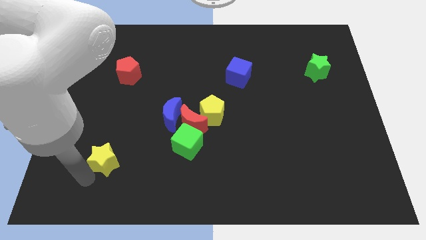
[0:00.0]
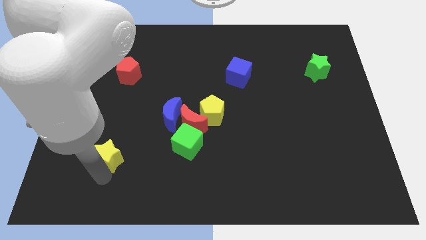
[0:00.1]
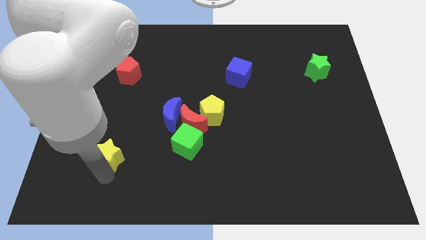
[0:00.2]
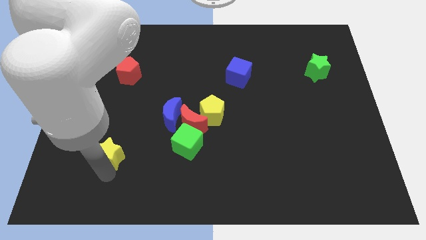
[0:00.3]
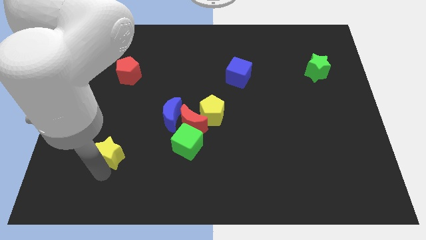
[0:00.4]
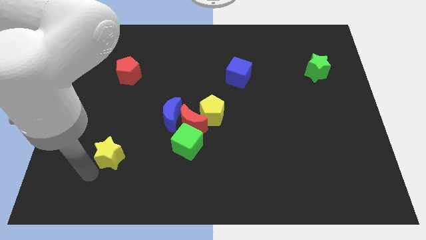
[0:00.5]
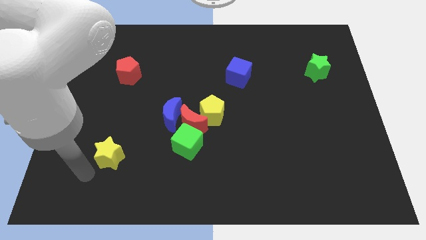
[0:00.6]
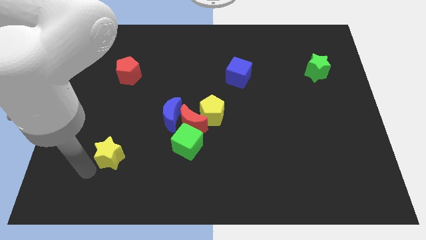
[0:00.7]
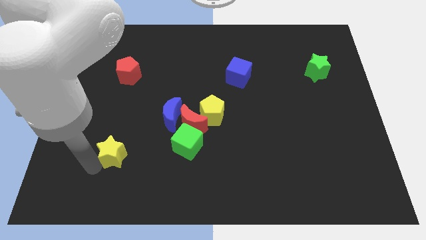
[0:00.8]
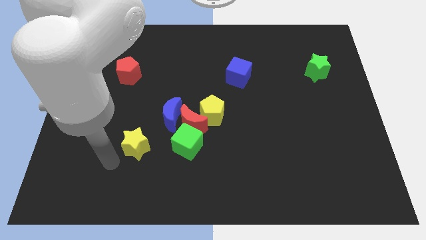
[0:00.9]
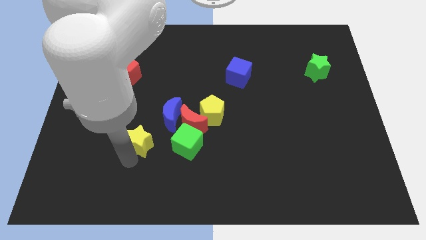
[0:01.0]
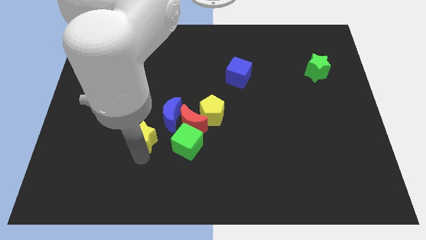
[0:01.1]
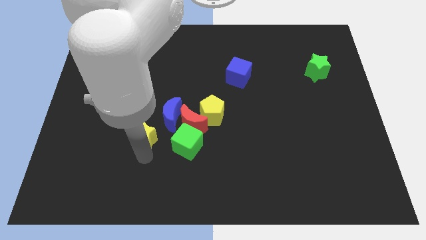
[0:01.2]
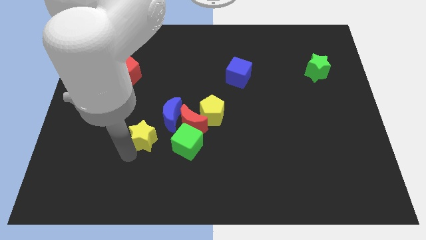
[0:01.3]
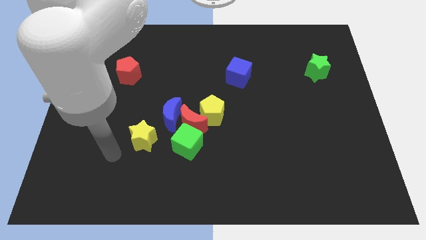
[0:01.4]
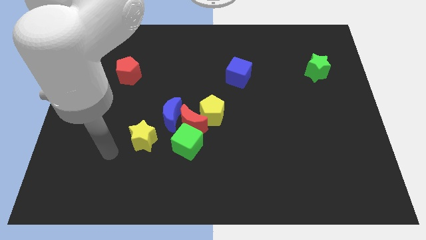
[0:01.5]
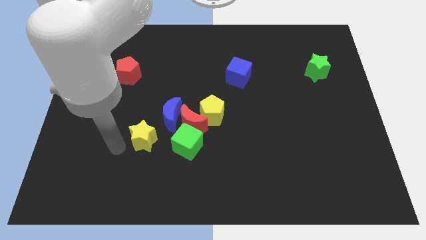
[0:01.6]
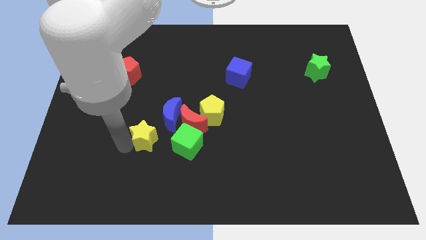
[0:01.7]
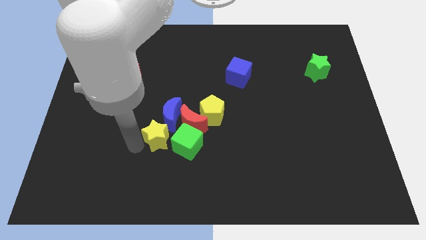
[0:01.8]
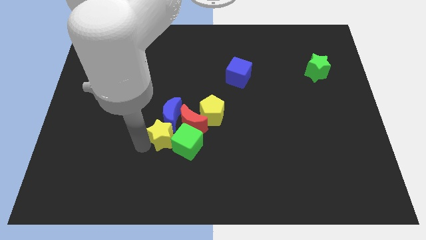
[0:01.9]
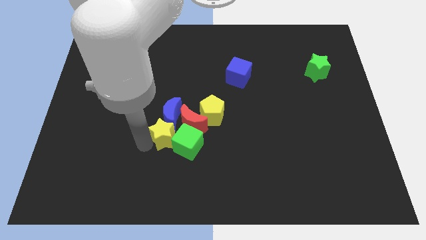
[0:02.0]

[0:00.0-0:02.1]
place the yellow star to the bottom of the blue crescent

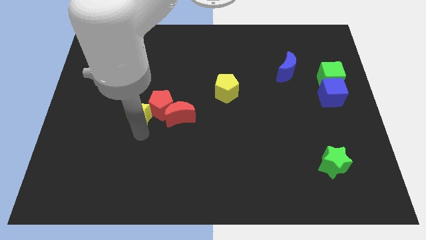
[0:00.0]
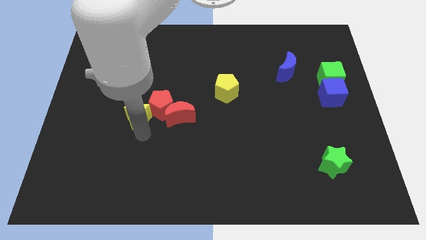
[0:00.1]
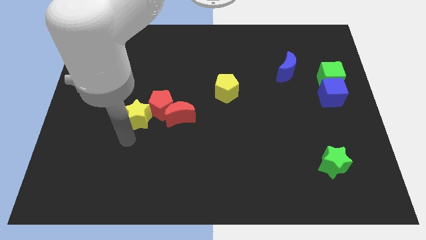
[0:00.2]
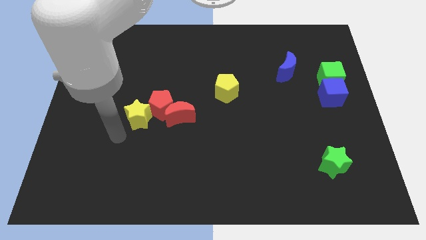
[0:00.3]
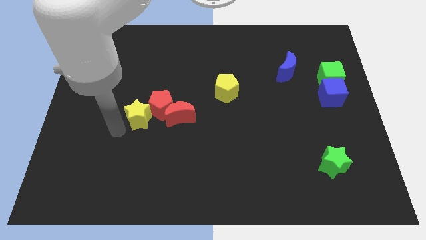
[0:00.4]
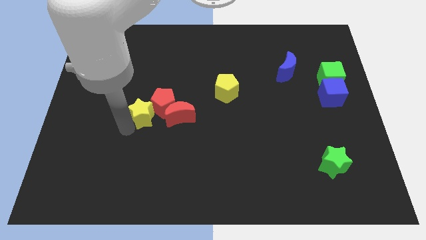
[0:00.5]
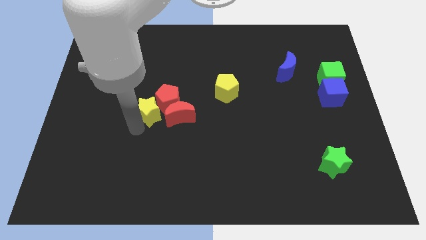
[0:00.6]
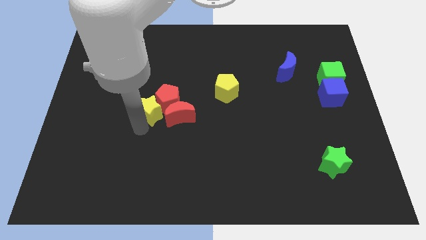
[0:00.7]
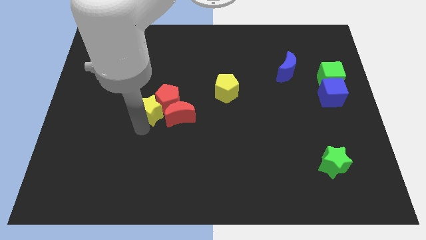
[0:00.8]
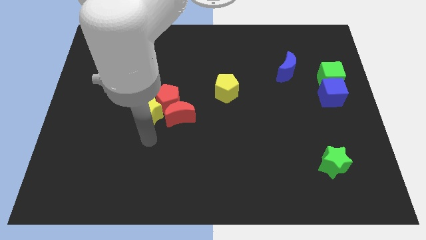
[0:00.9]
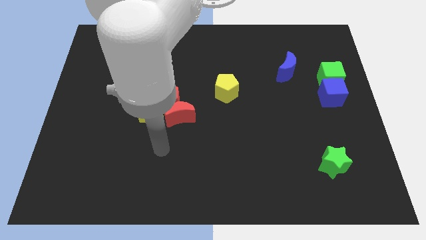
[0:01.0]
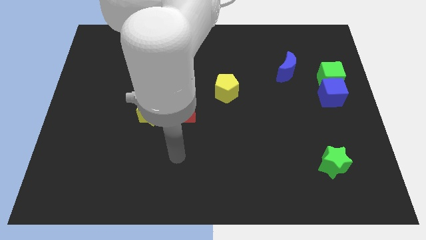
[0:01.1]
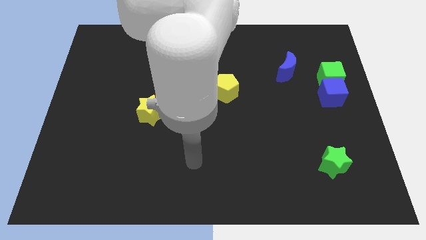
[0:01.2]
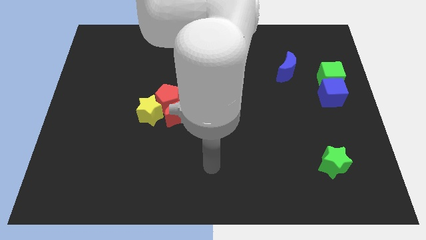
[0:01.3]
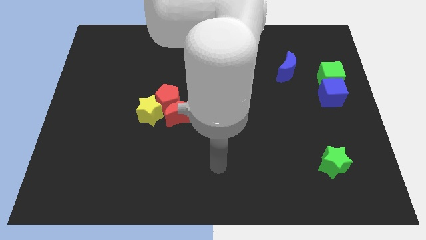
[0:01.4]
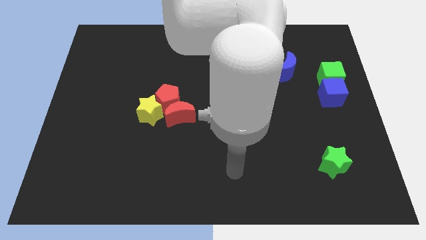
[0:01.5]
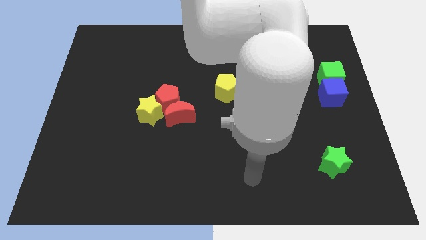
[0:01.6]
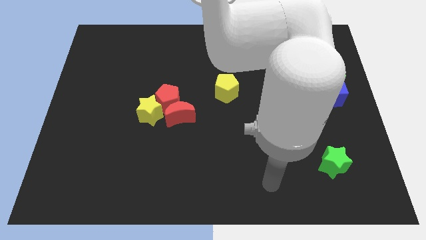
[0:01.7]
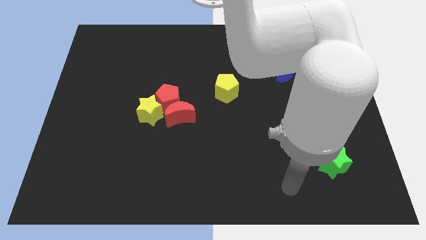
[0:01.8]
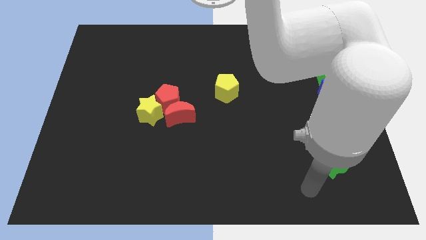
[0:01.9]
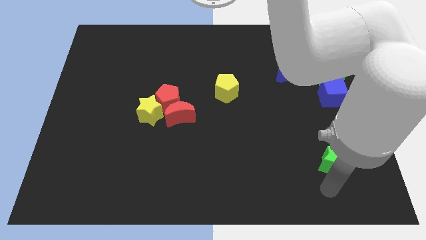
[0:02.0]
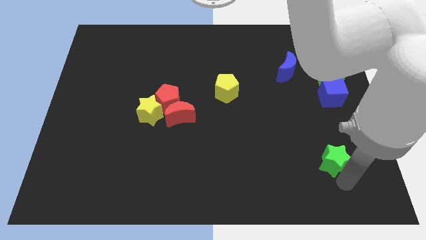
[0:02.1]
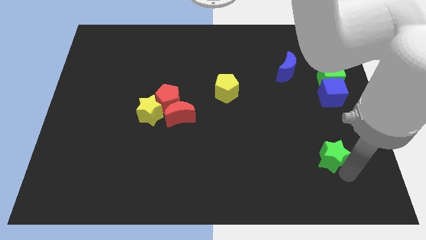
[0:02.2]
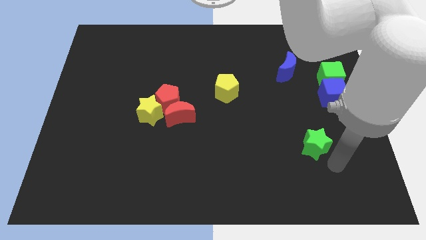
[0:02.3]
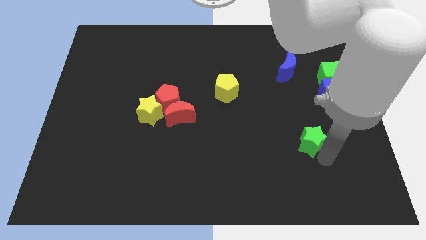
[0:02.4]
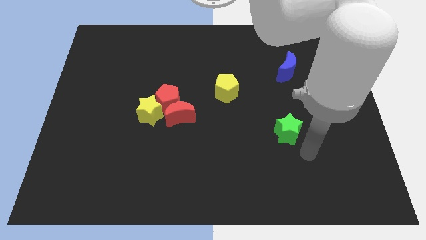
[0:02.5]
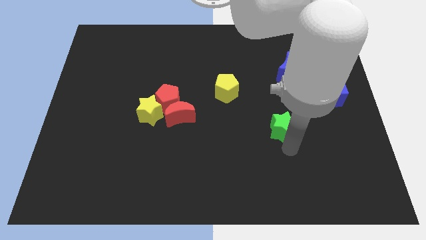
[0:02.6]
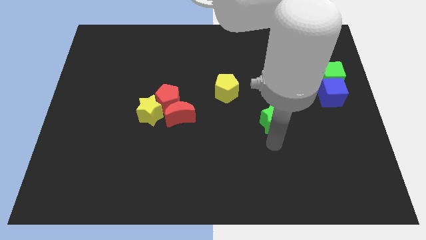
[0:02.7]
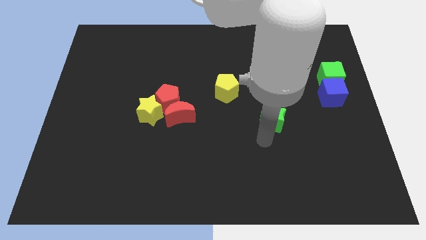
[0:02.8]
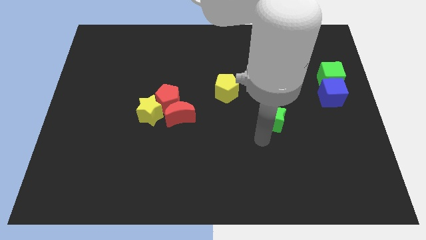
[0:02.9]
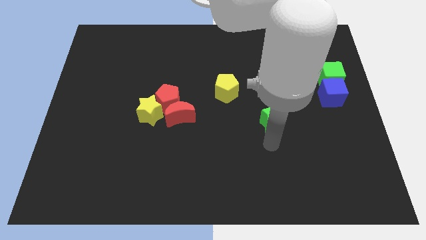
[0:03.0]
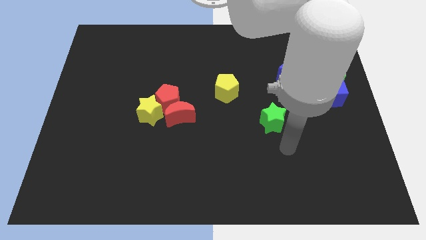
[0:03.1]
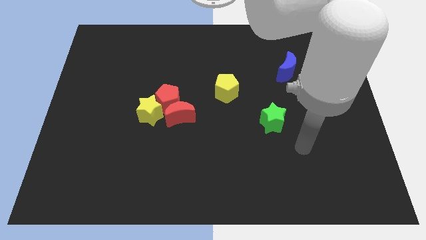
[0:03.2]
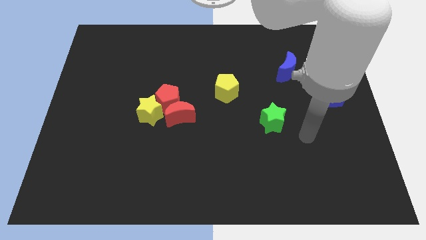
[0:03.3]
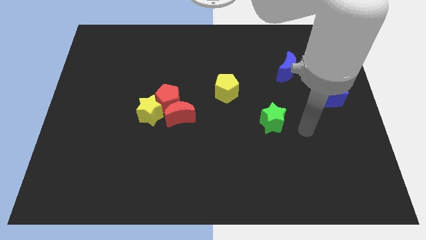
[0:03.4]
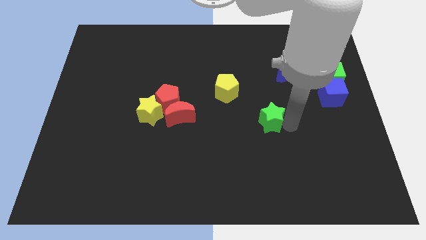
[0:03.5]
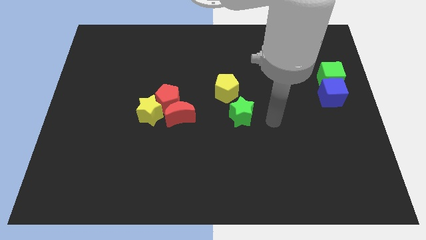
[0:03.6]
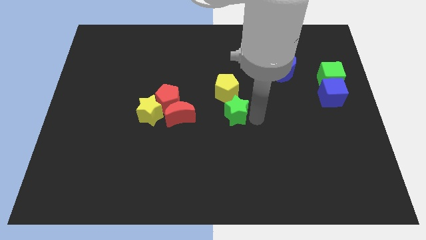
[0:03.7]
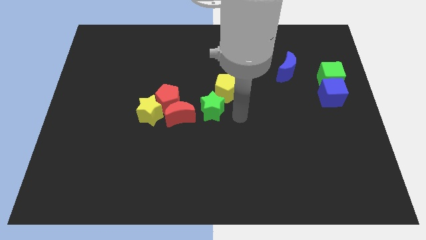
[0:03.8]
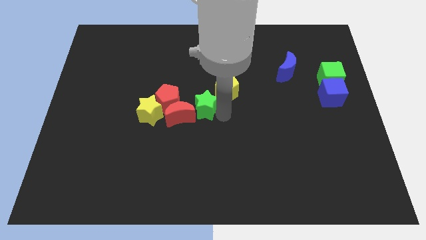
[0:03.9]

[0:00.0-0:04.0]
drag the green star close to the red moon

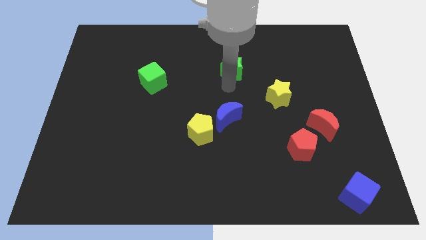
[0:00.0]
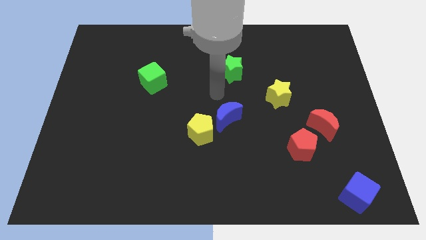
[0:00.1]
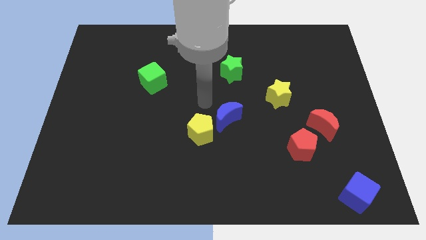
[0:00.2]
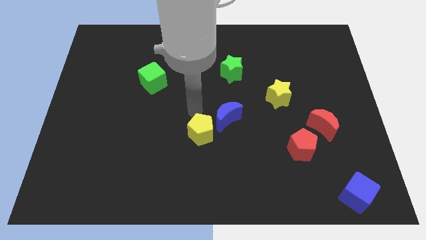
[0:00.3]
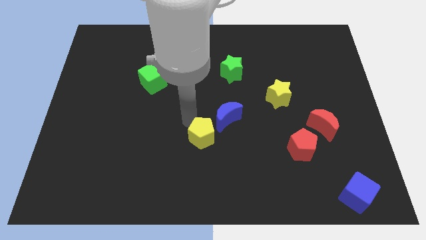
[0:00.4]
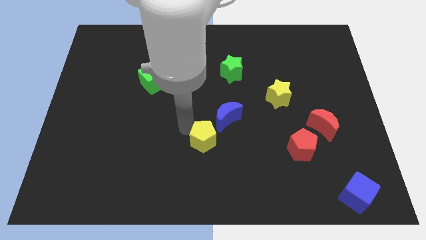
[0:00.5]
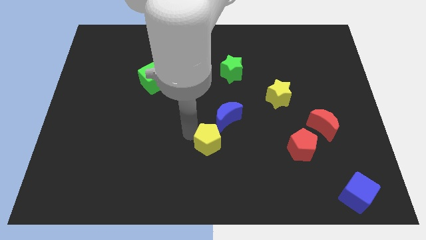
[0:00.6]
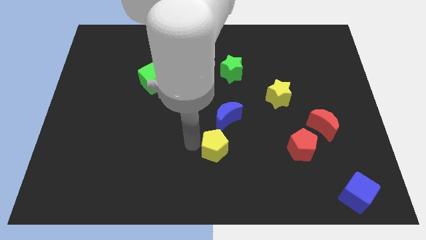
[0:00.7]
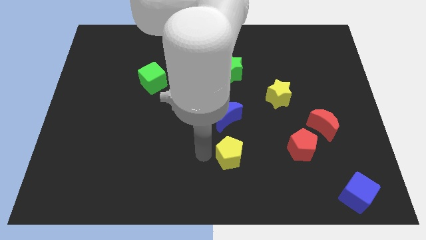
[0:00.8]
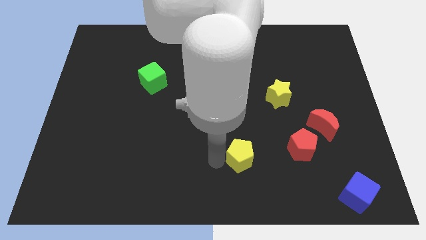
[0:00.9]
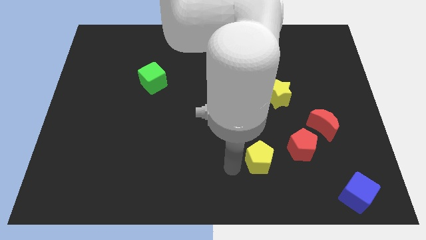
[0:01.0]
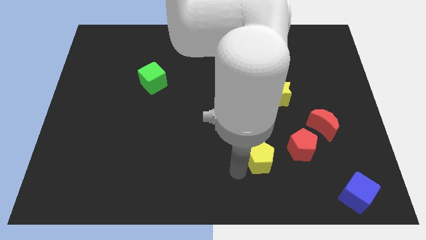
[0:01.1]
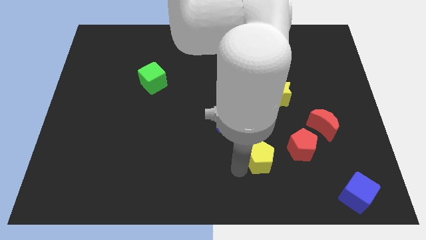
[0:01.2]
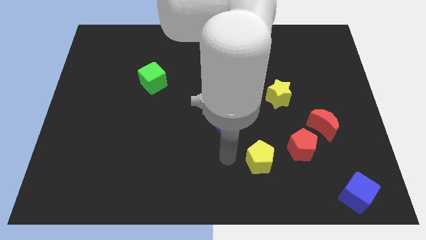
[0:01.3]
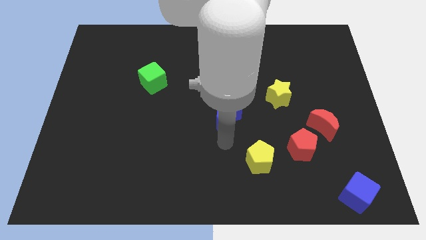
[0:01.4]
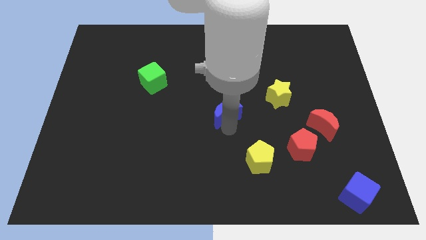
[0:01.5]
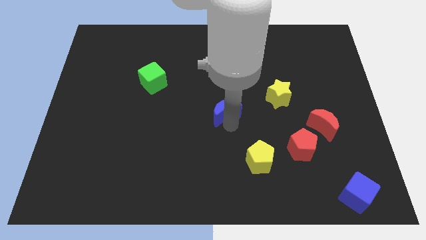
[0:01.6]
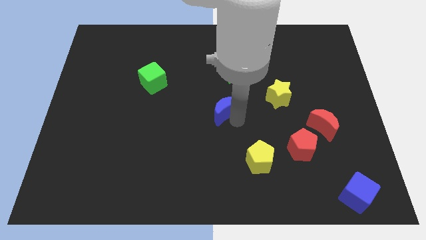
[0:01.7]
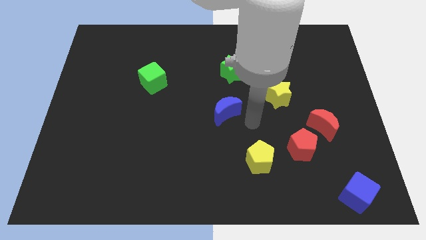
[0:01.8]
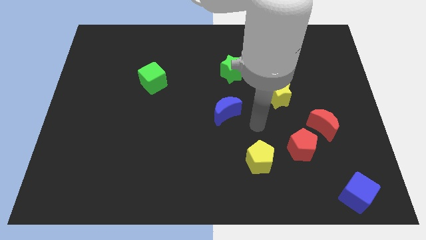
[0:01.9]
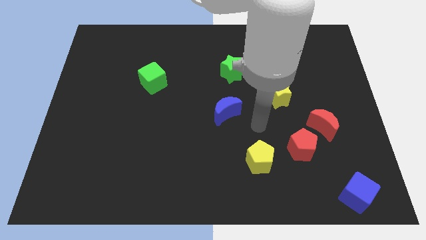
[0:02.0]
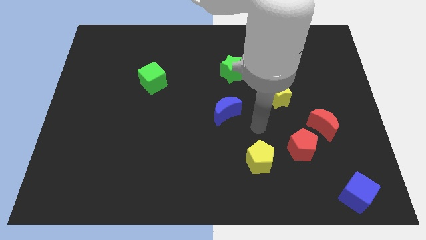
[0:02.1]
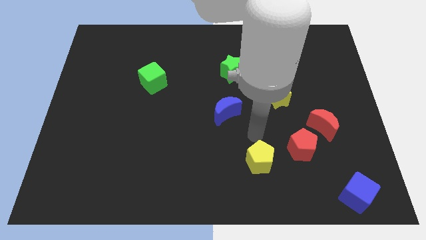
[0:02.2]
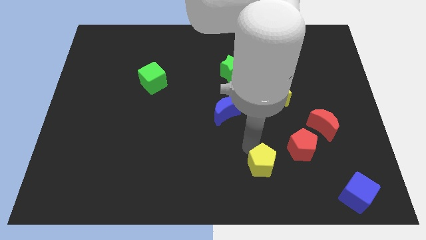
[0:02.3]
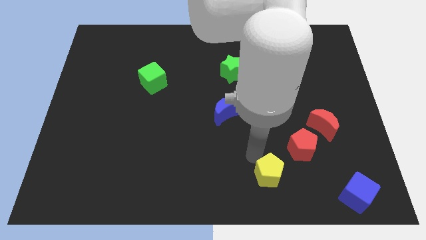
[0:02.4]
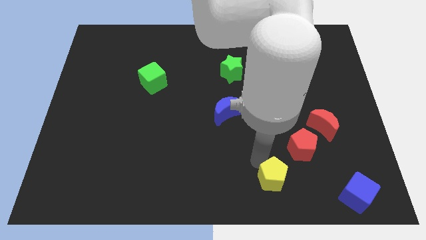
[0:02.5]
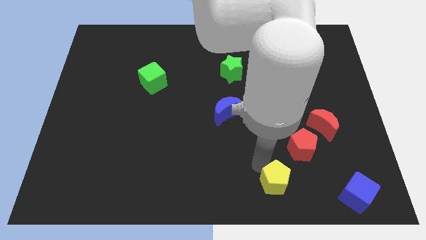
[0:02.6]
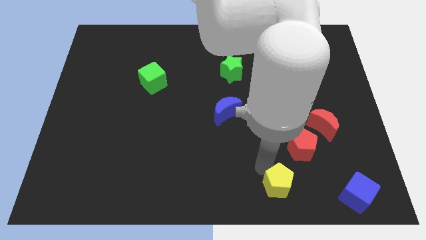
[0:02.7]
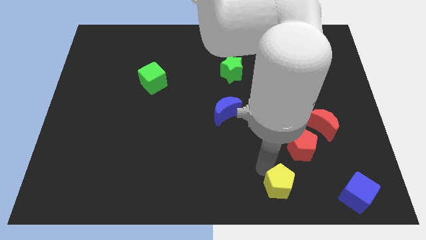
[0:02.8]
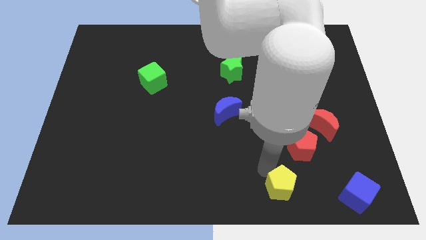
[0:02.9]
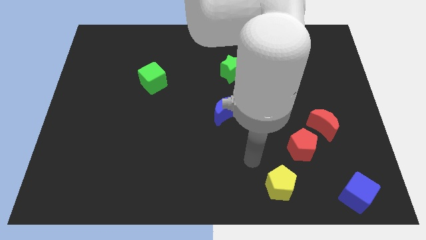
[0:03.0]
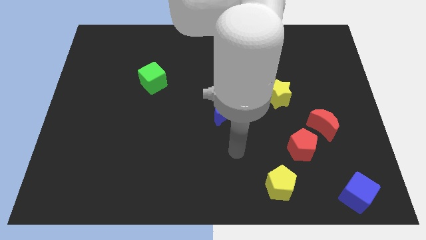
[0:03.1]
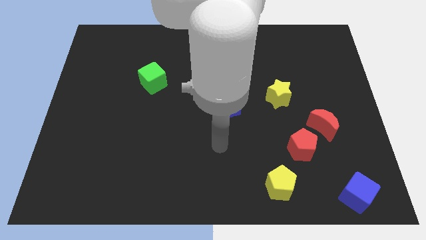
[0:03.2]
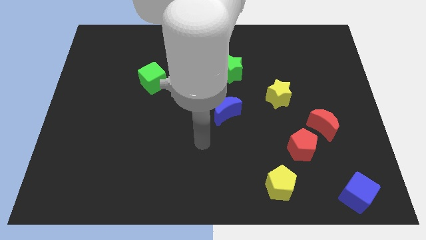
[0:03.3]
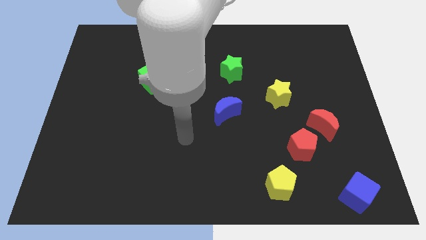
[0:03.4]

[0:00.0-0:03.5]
move the yellow pentagon to the bottom left of the red pentagon
